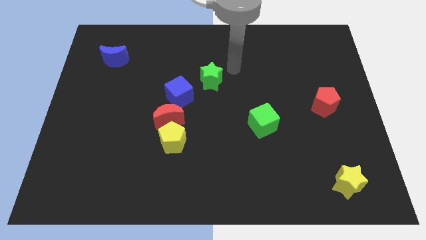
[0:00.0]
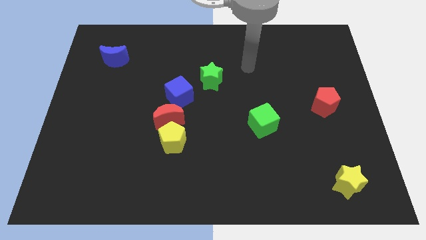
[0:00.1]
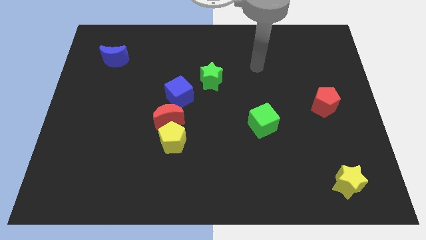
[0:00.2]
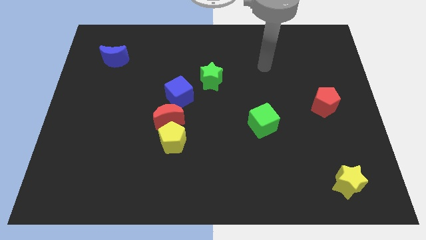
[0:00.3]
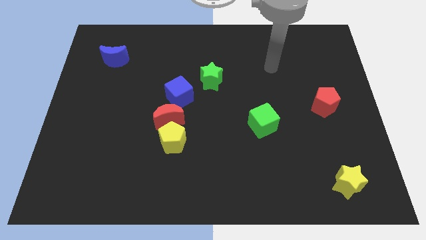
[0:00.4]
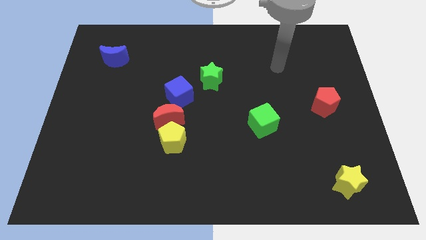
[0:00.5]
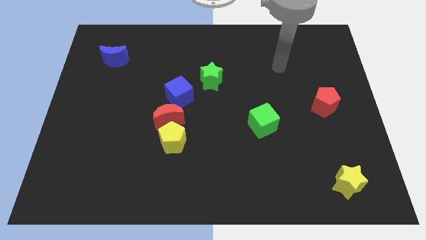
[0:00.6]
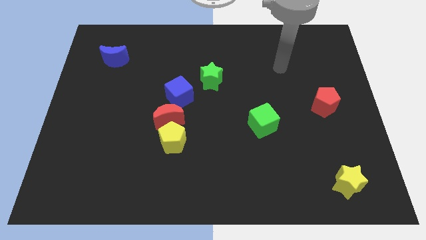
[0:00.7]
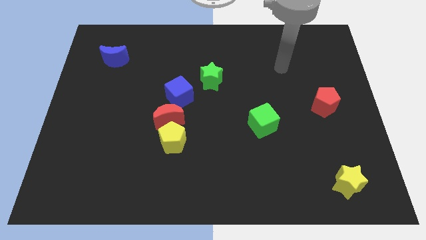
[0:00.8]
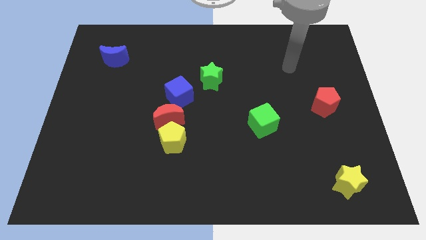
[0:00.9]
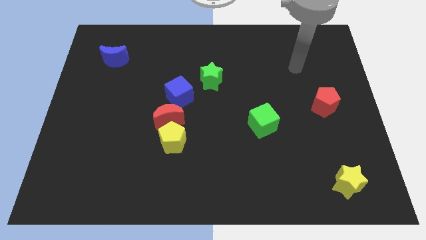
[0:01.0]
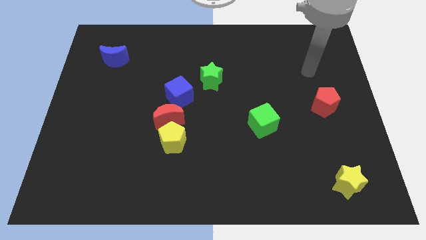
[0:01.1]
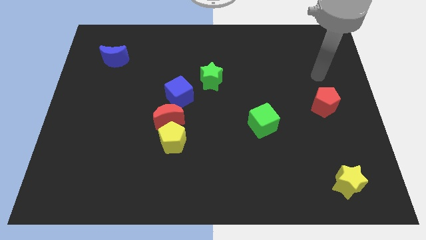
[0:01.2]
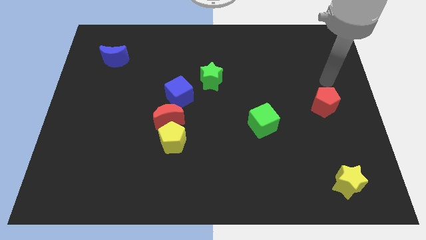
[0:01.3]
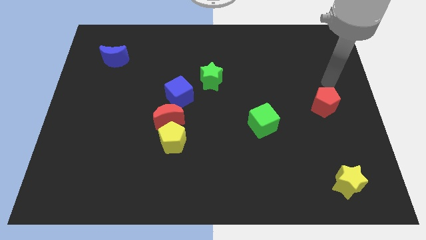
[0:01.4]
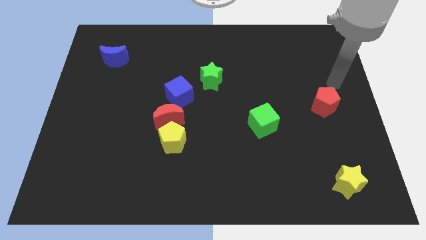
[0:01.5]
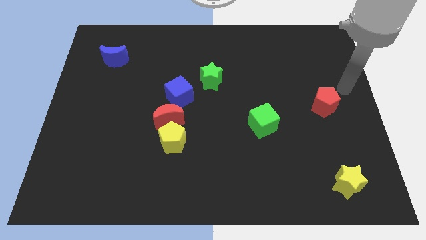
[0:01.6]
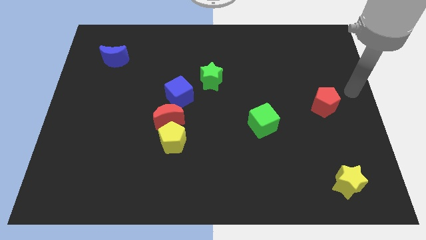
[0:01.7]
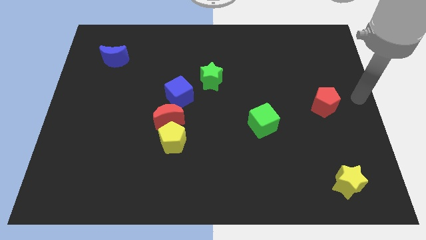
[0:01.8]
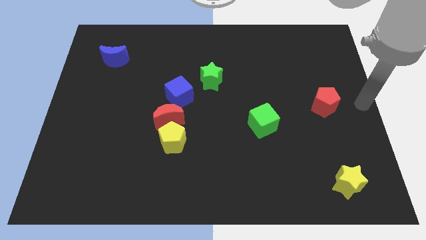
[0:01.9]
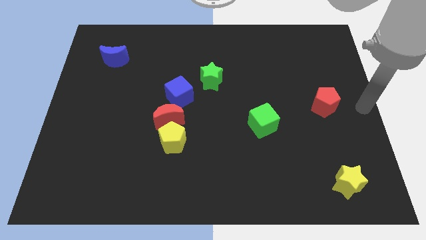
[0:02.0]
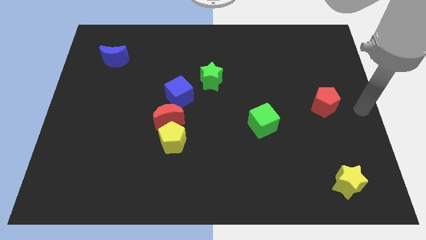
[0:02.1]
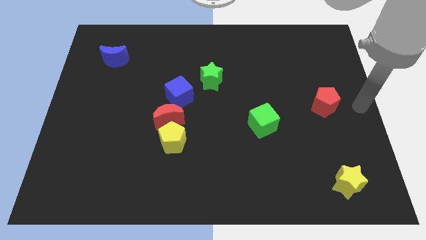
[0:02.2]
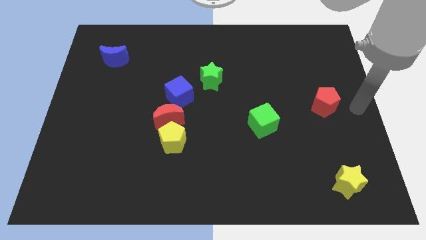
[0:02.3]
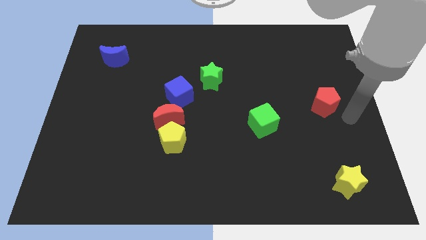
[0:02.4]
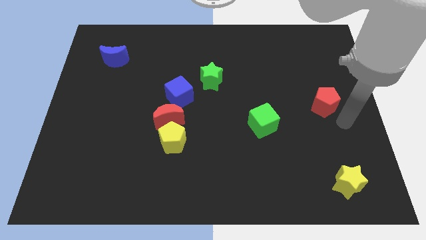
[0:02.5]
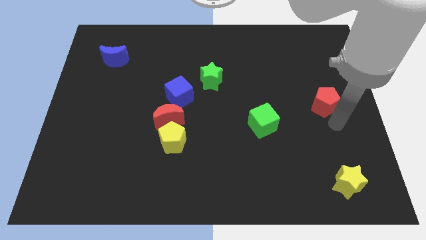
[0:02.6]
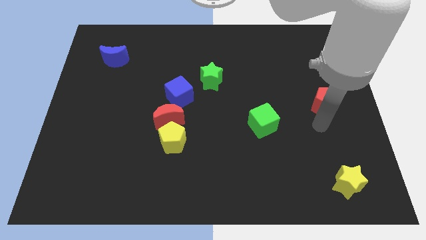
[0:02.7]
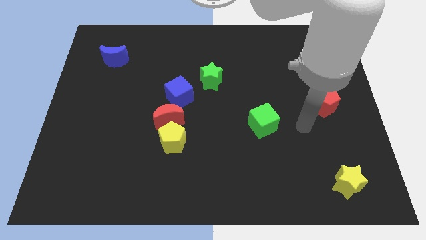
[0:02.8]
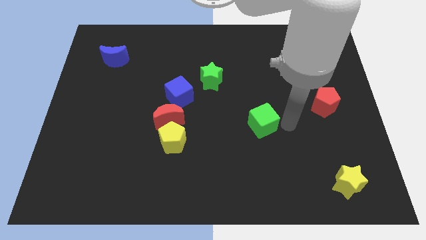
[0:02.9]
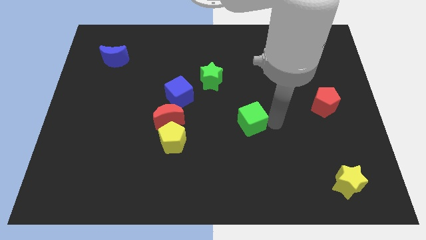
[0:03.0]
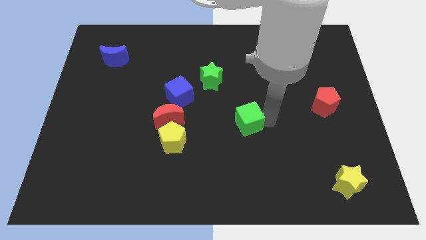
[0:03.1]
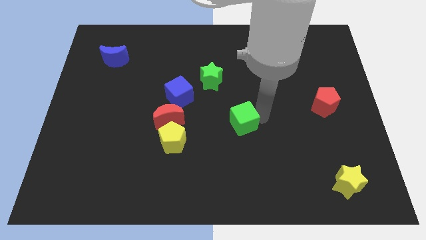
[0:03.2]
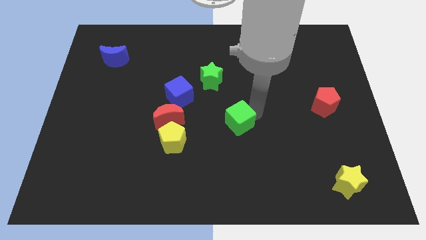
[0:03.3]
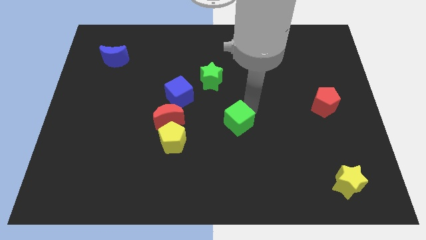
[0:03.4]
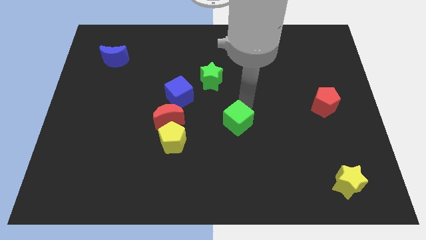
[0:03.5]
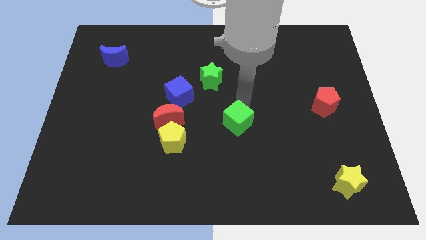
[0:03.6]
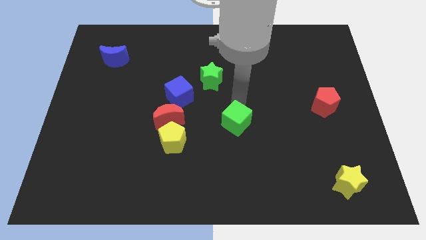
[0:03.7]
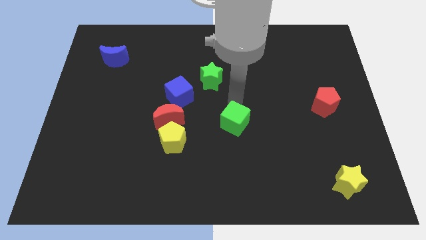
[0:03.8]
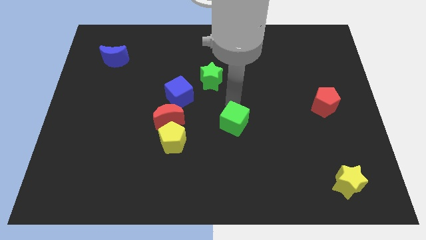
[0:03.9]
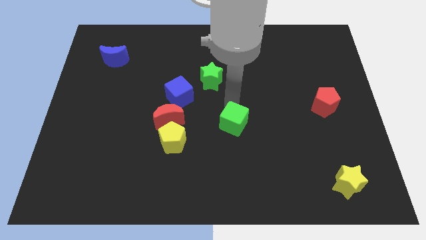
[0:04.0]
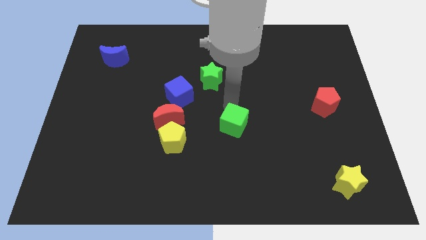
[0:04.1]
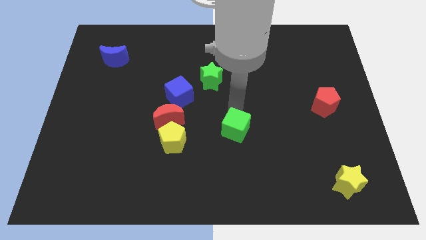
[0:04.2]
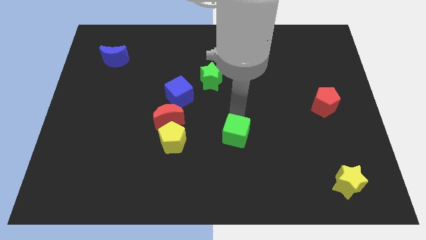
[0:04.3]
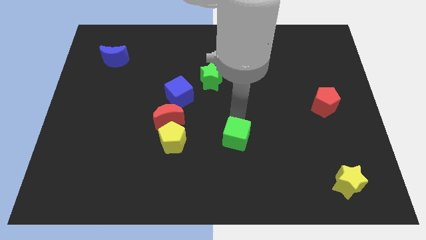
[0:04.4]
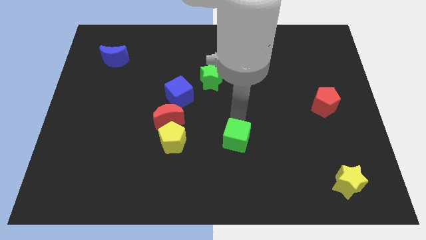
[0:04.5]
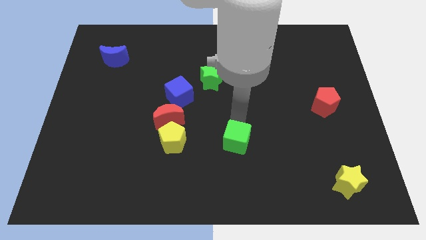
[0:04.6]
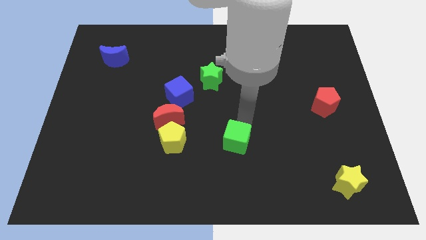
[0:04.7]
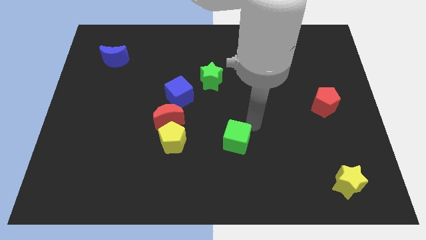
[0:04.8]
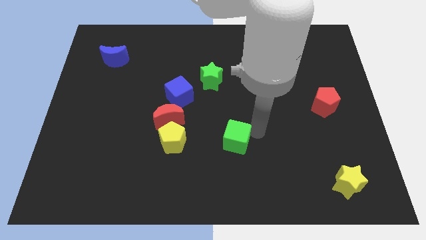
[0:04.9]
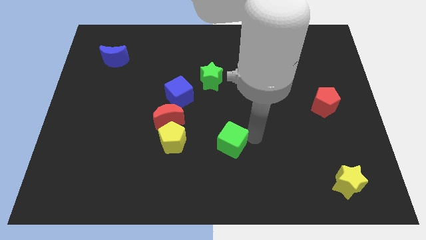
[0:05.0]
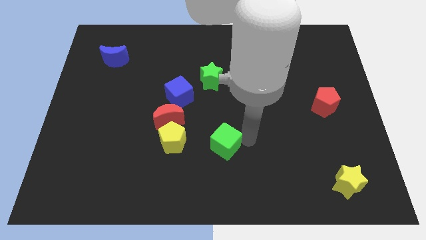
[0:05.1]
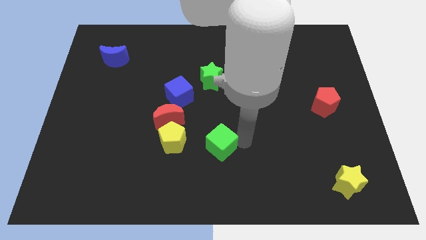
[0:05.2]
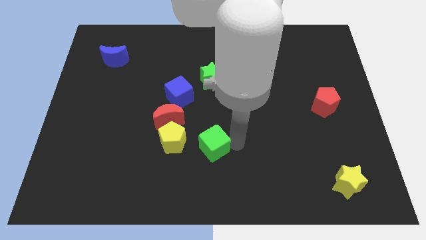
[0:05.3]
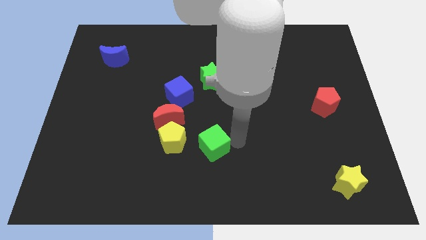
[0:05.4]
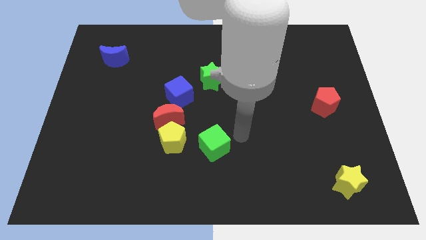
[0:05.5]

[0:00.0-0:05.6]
place the green cube horizontally to the right side of the yellow pentagon

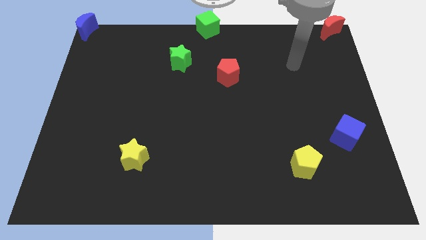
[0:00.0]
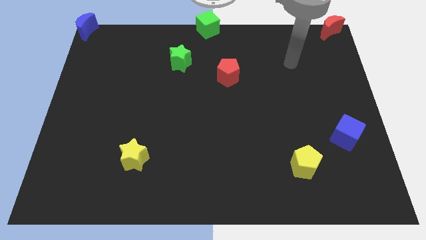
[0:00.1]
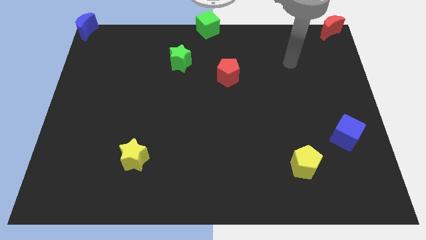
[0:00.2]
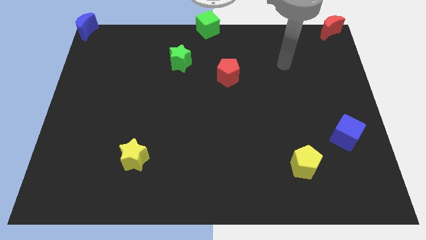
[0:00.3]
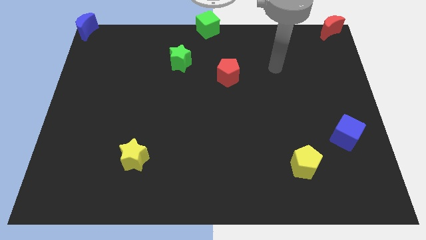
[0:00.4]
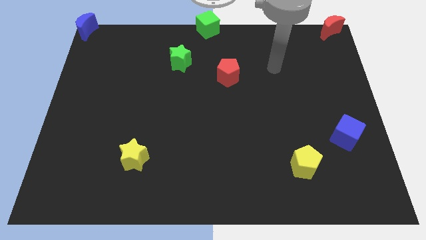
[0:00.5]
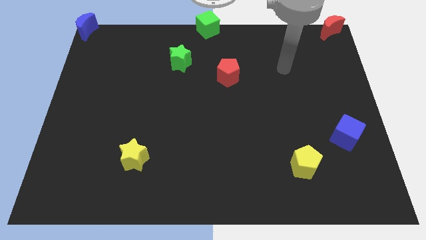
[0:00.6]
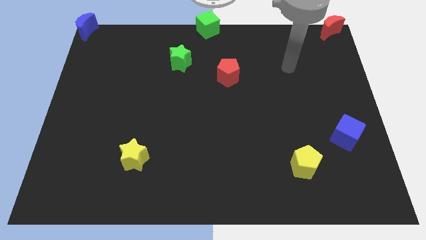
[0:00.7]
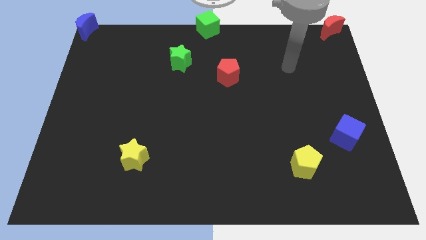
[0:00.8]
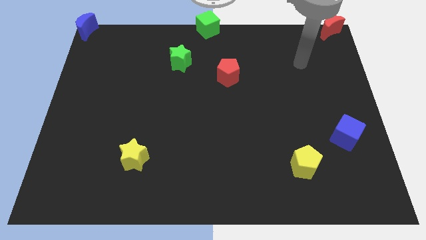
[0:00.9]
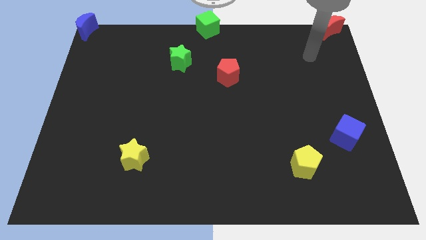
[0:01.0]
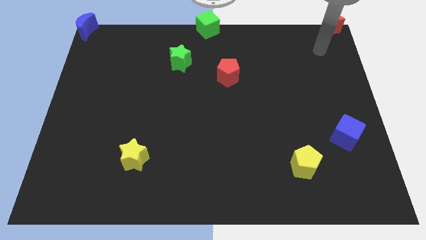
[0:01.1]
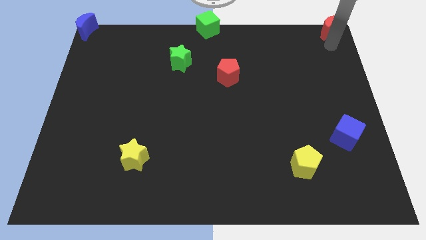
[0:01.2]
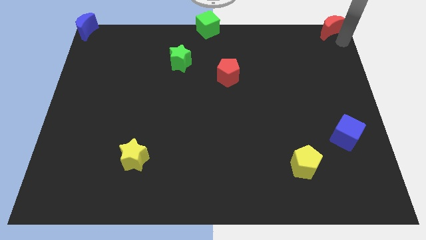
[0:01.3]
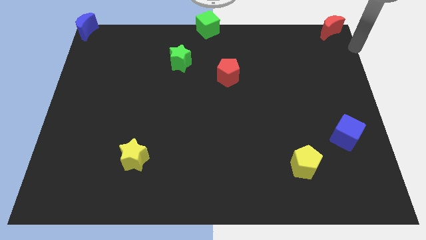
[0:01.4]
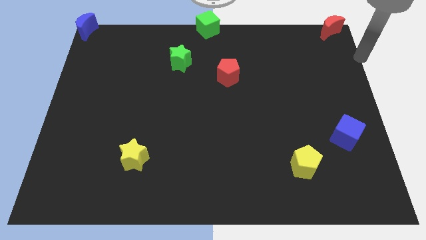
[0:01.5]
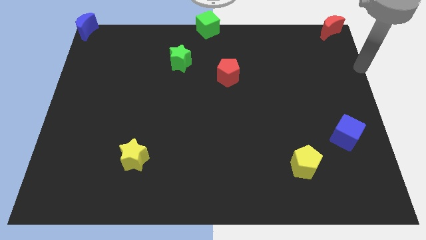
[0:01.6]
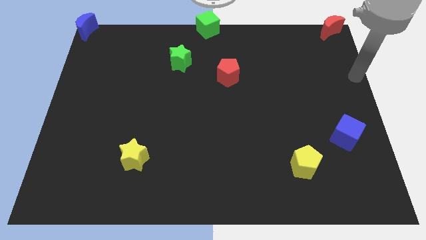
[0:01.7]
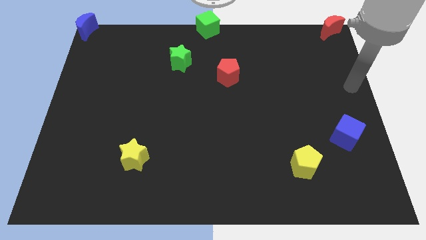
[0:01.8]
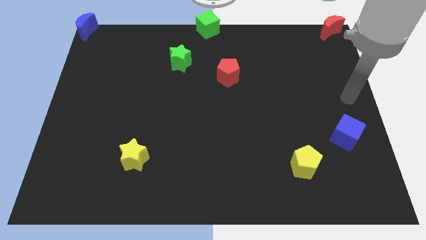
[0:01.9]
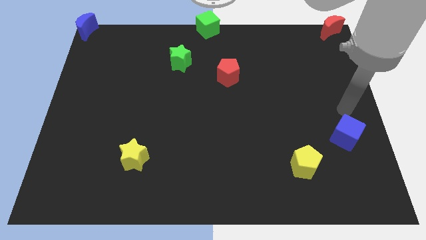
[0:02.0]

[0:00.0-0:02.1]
move your arm towards the blue cube

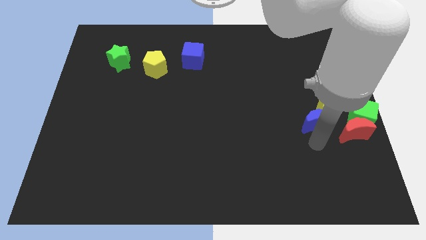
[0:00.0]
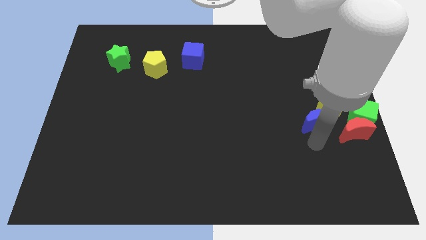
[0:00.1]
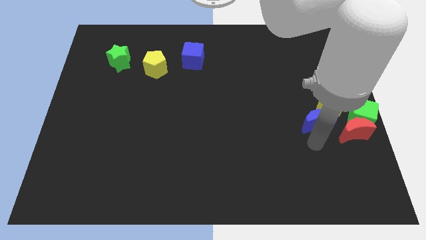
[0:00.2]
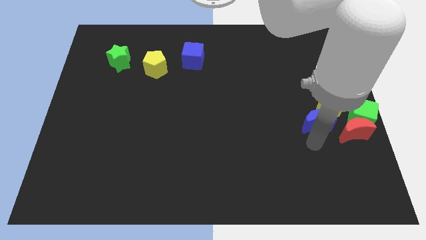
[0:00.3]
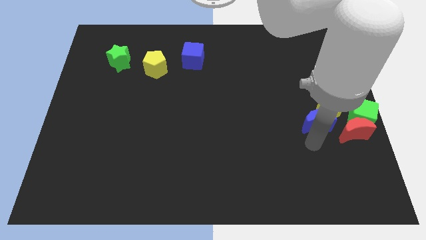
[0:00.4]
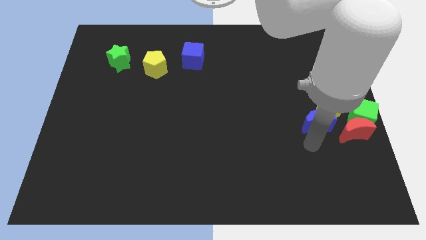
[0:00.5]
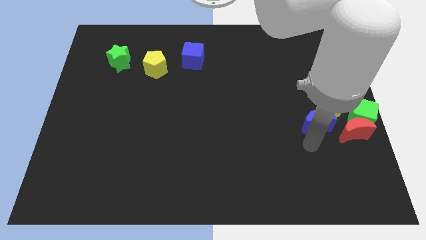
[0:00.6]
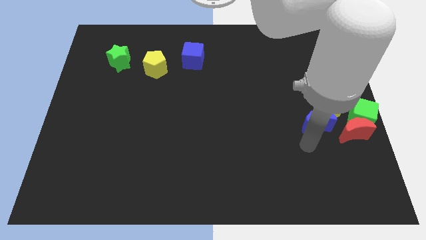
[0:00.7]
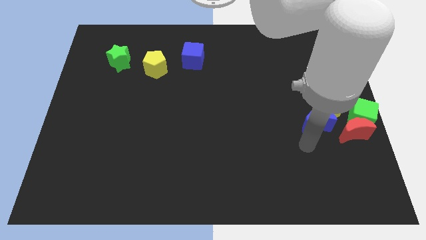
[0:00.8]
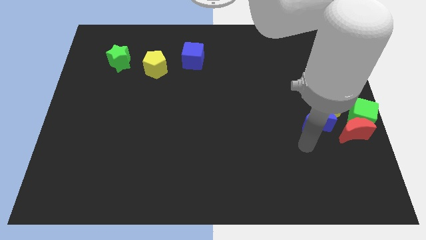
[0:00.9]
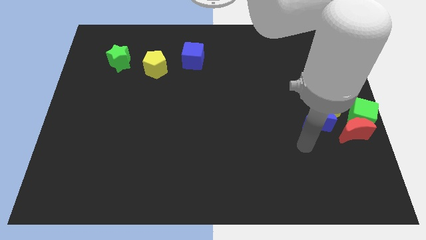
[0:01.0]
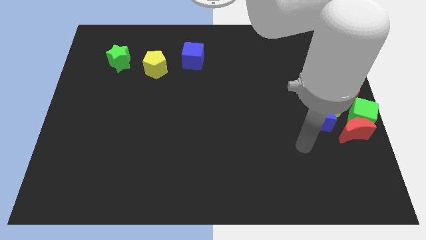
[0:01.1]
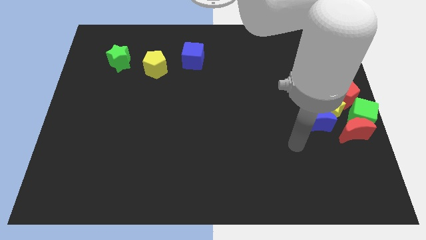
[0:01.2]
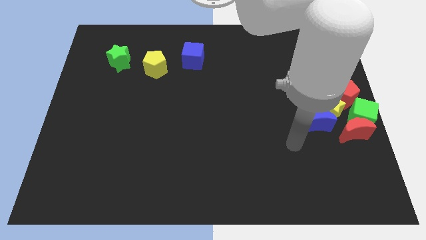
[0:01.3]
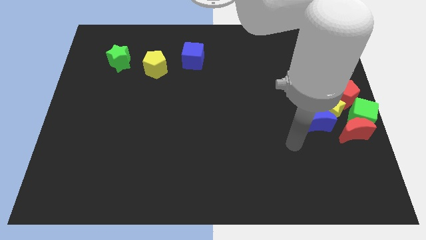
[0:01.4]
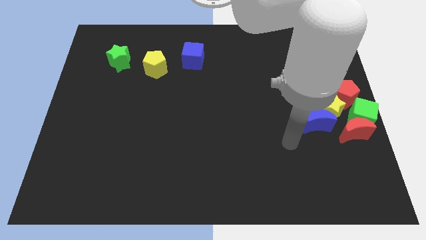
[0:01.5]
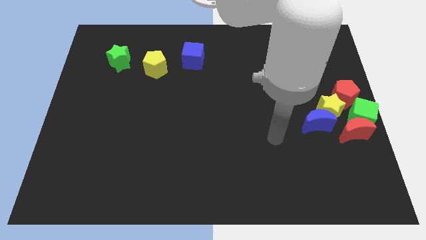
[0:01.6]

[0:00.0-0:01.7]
move your arm away from the blue moon
